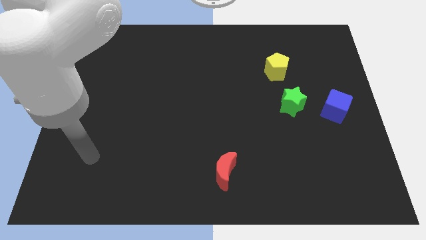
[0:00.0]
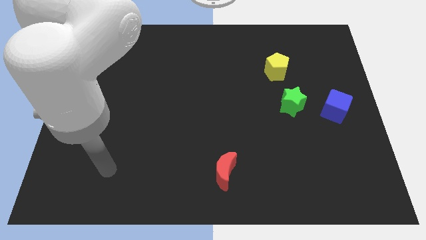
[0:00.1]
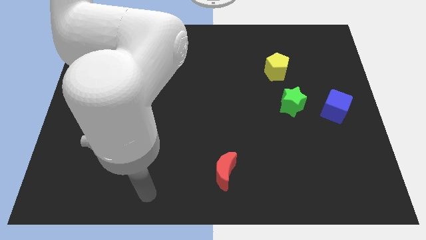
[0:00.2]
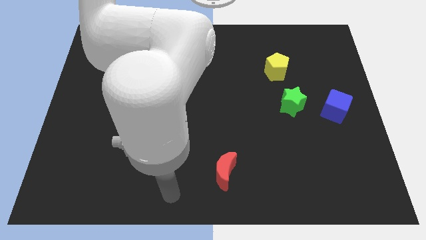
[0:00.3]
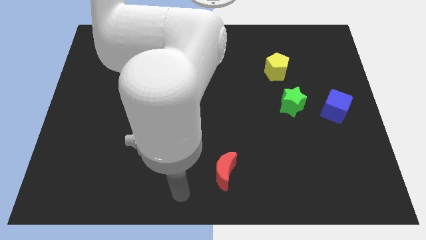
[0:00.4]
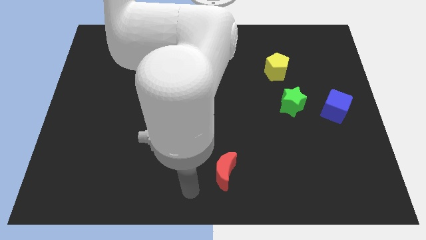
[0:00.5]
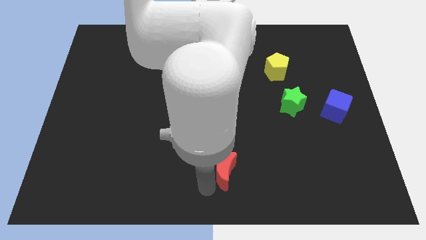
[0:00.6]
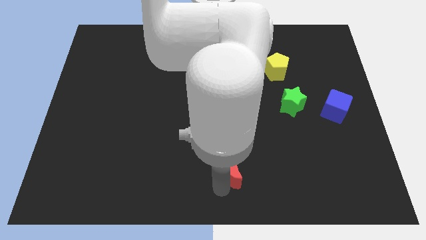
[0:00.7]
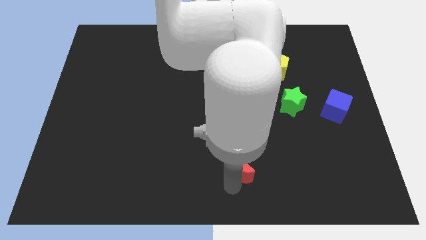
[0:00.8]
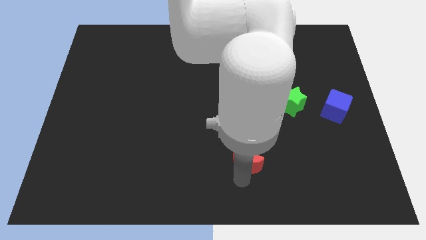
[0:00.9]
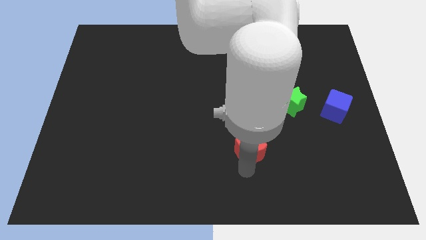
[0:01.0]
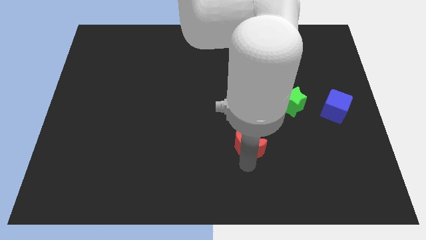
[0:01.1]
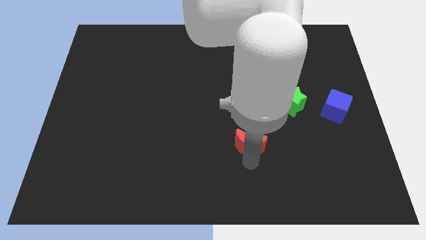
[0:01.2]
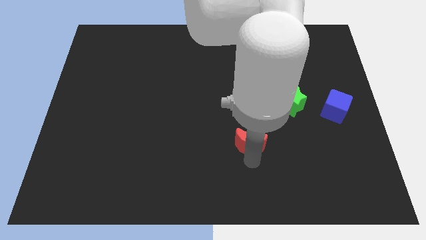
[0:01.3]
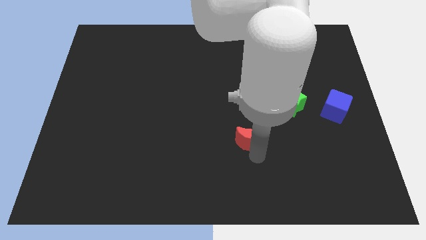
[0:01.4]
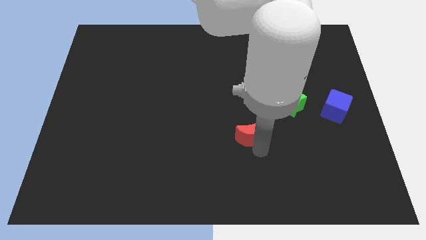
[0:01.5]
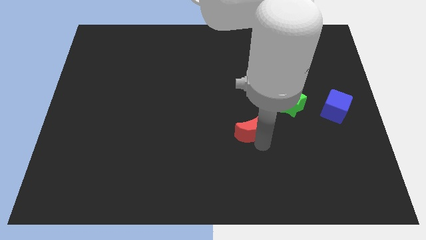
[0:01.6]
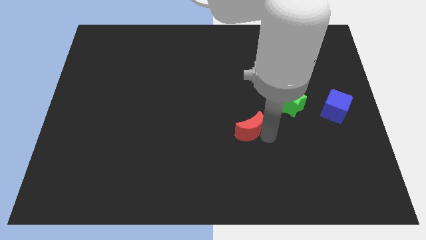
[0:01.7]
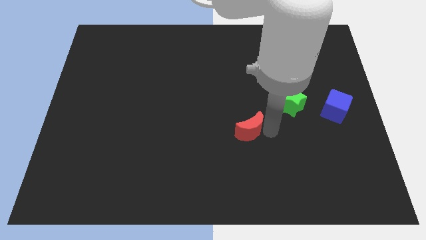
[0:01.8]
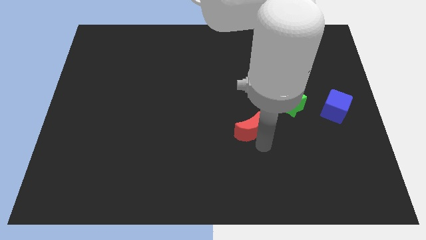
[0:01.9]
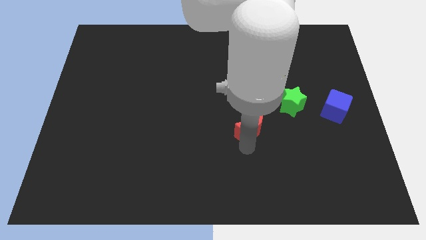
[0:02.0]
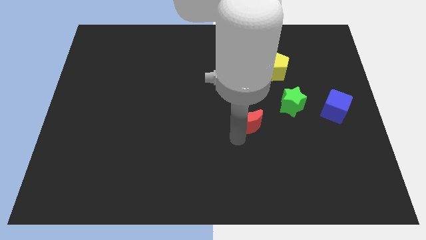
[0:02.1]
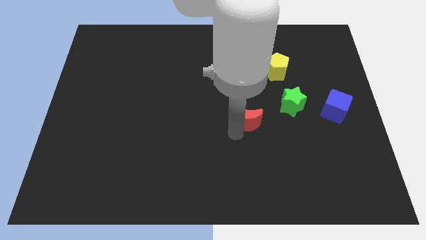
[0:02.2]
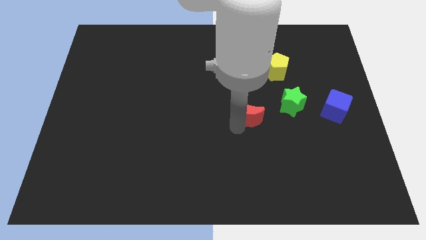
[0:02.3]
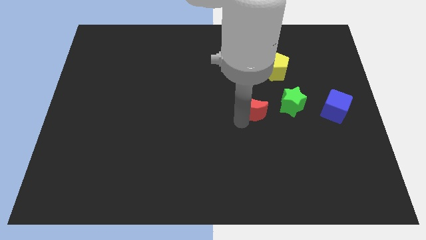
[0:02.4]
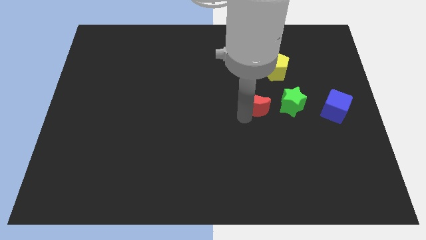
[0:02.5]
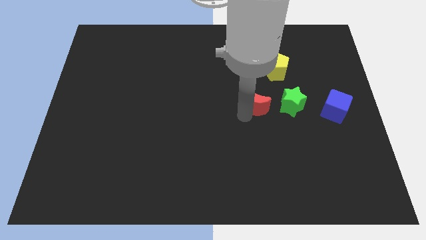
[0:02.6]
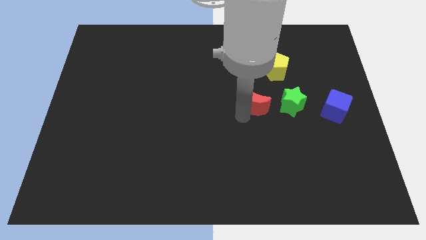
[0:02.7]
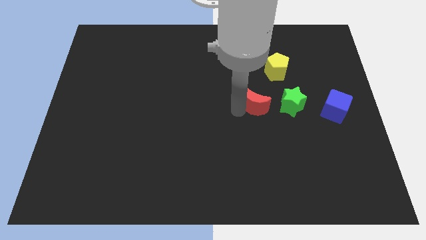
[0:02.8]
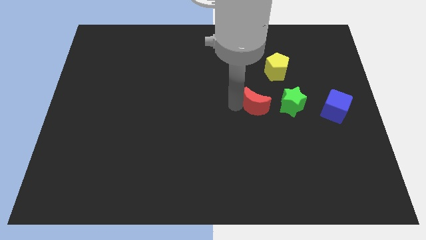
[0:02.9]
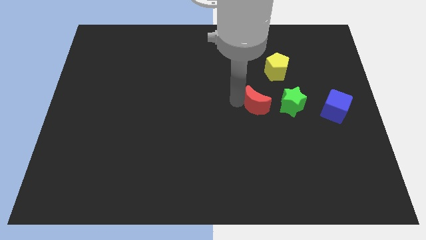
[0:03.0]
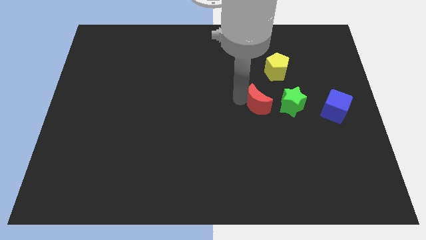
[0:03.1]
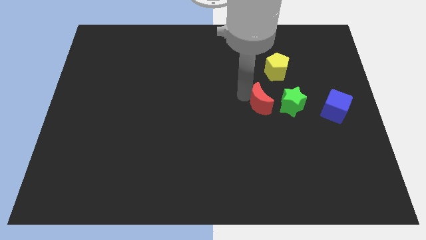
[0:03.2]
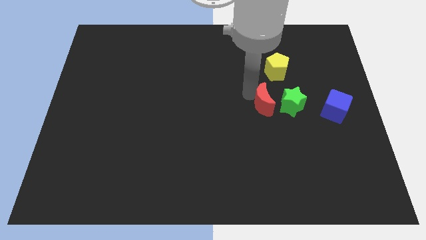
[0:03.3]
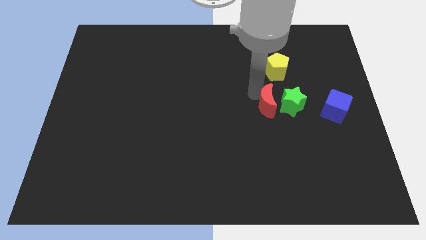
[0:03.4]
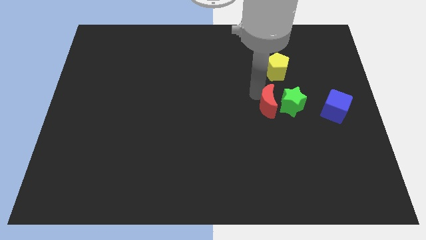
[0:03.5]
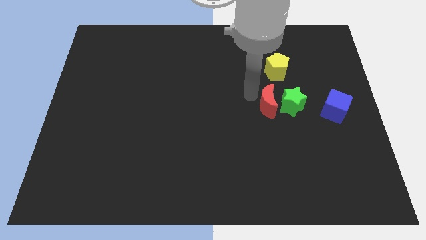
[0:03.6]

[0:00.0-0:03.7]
slide the red moon towards the green block

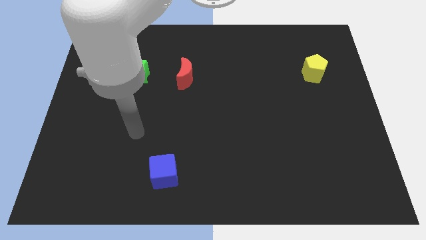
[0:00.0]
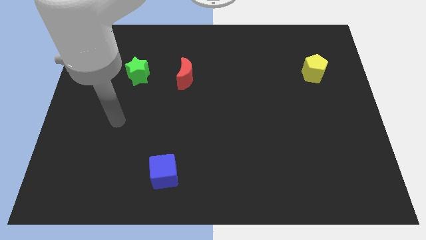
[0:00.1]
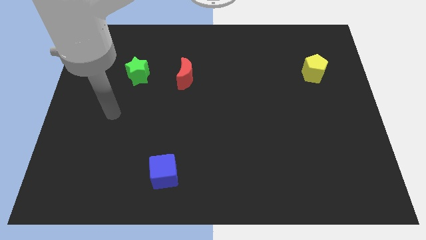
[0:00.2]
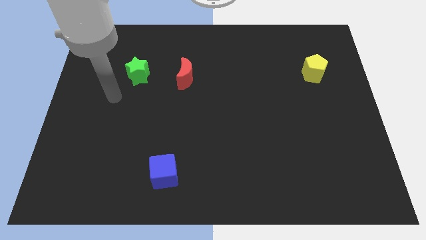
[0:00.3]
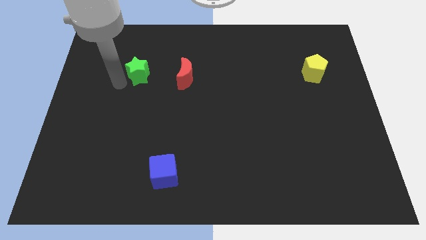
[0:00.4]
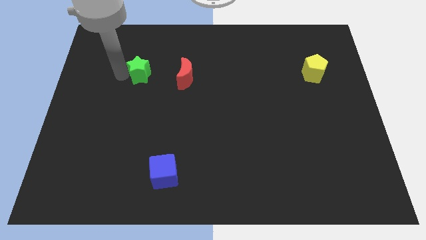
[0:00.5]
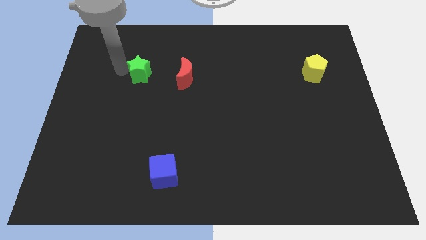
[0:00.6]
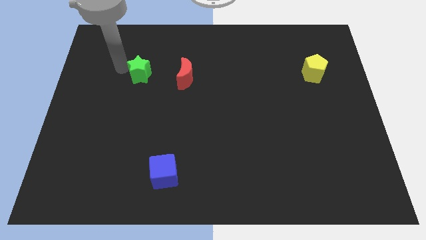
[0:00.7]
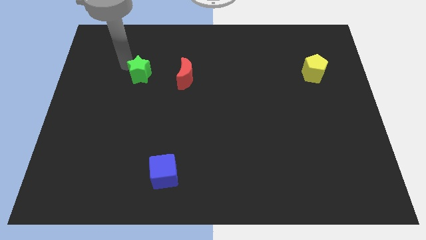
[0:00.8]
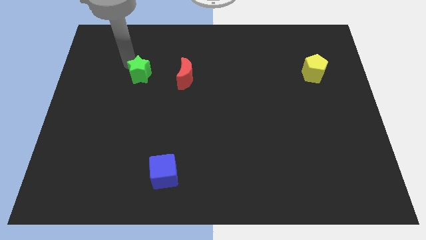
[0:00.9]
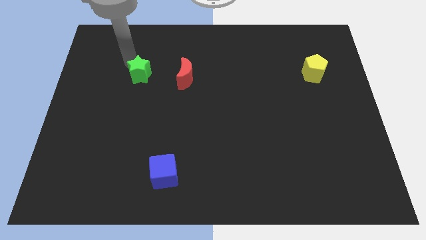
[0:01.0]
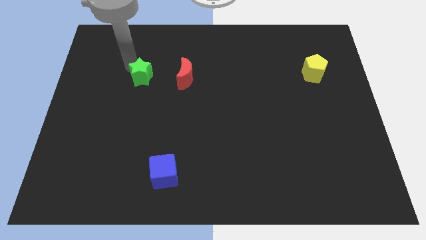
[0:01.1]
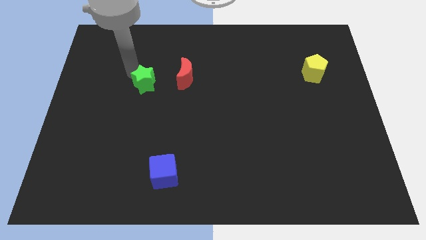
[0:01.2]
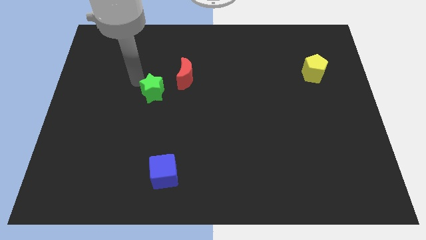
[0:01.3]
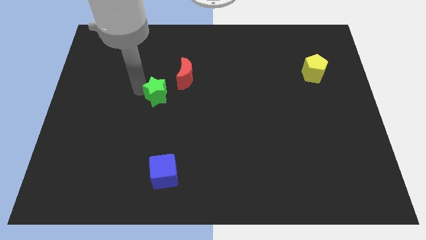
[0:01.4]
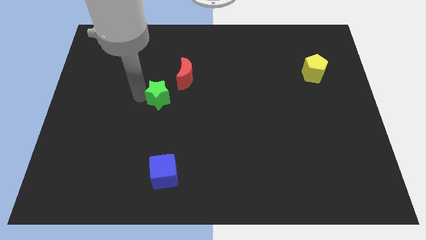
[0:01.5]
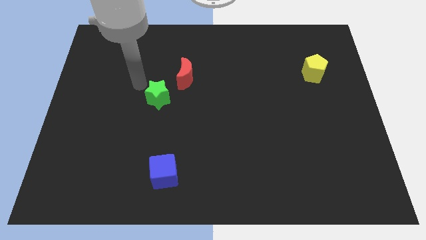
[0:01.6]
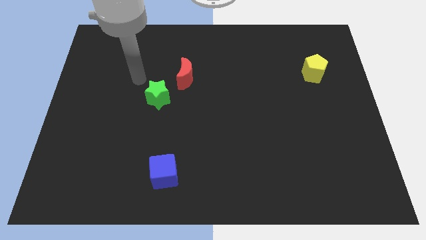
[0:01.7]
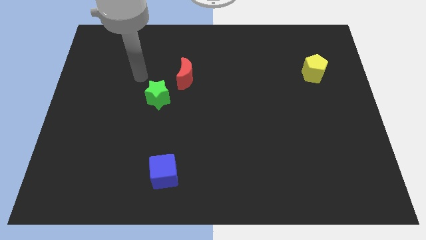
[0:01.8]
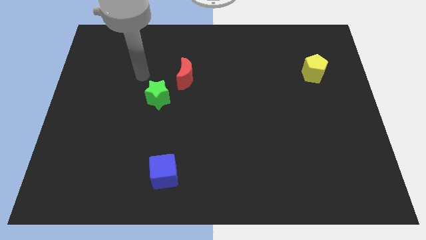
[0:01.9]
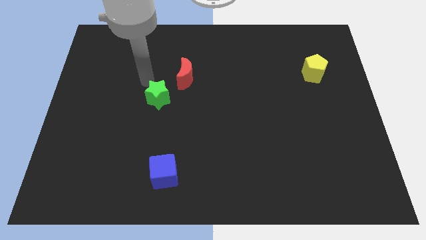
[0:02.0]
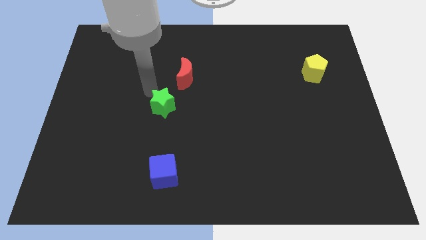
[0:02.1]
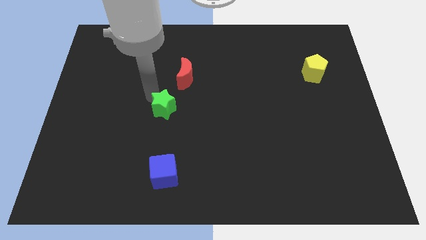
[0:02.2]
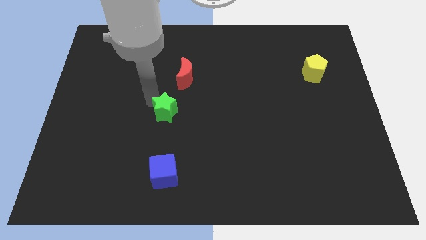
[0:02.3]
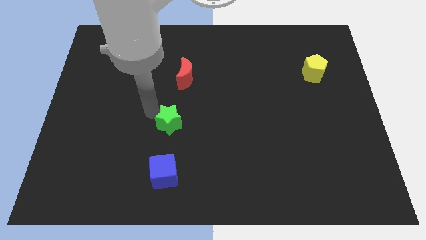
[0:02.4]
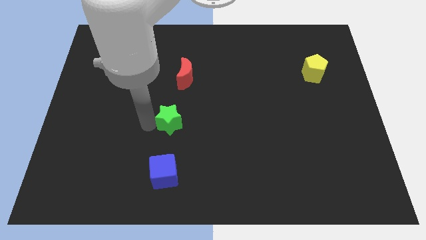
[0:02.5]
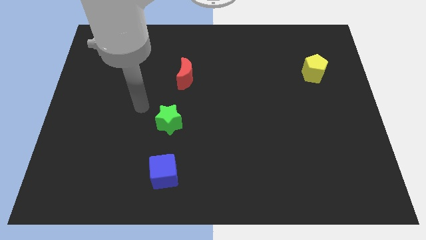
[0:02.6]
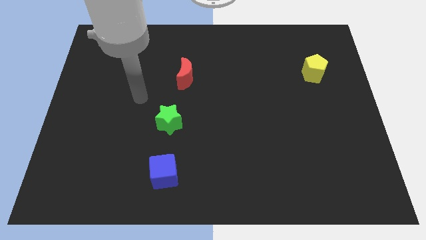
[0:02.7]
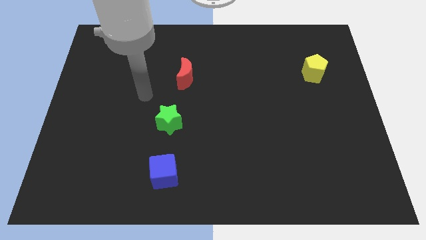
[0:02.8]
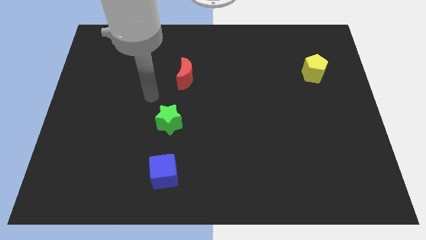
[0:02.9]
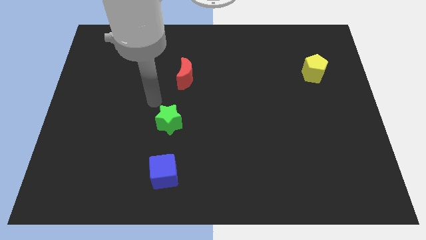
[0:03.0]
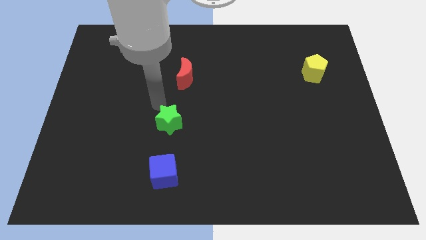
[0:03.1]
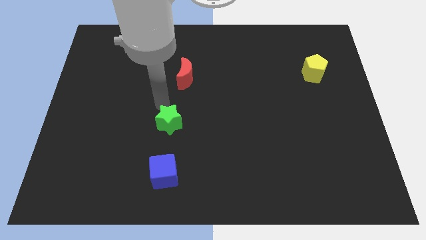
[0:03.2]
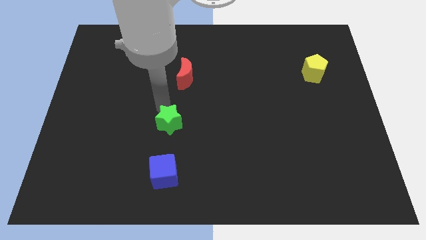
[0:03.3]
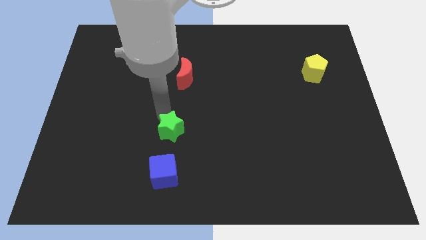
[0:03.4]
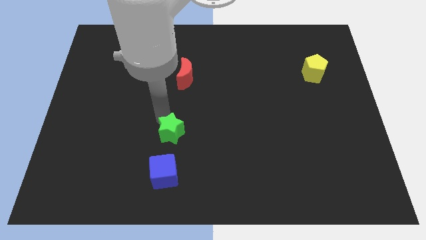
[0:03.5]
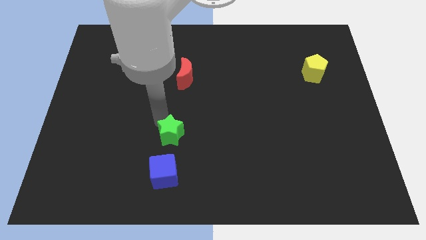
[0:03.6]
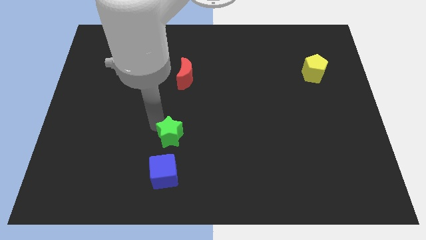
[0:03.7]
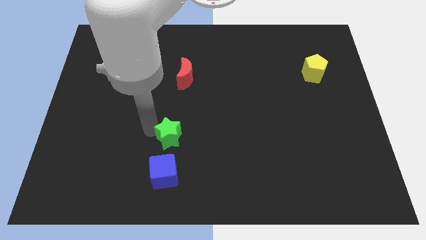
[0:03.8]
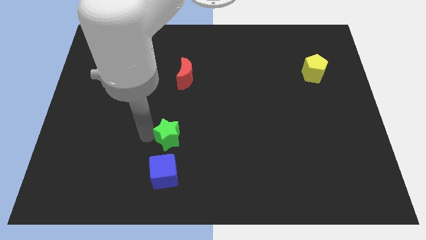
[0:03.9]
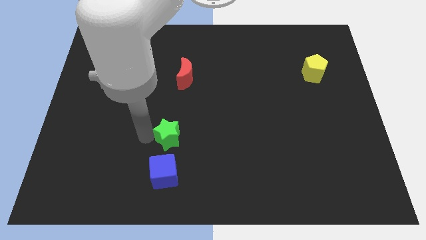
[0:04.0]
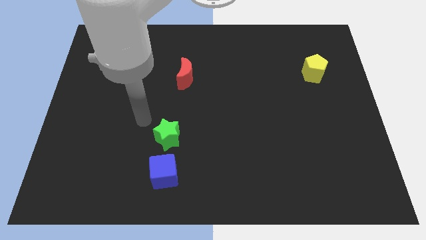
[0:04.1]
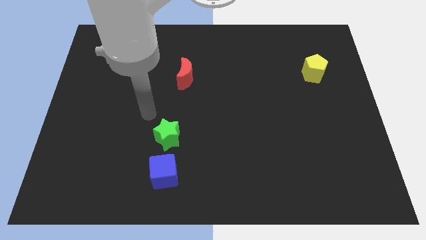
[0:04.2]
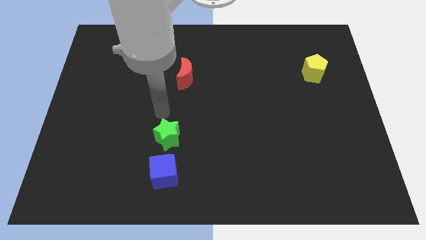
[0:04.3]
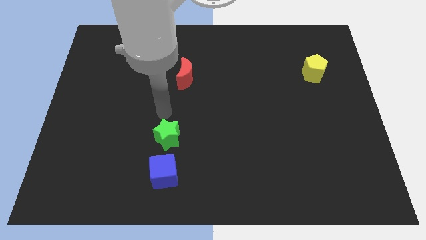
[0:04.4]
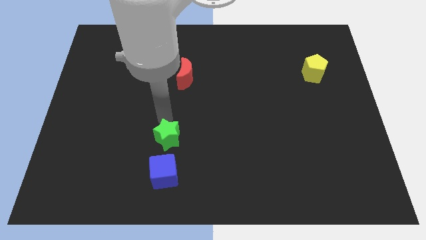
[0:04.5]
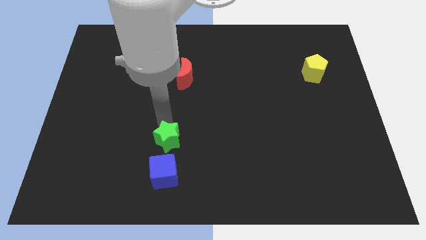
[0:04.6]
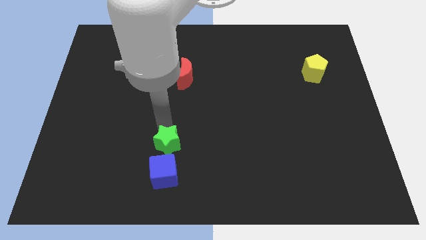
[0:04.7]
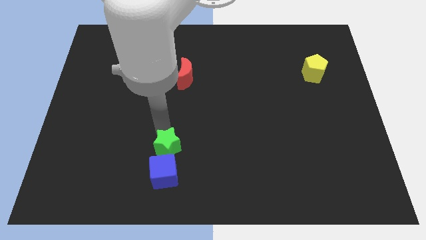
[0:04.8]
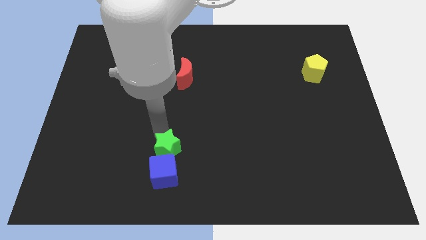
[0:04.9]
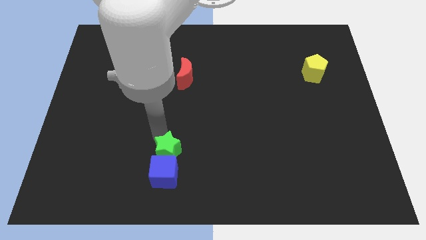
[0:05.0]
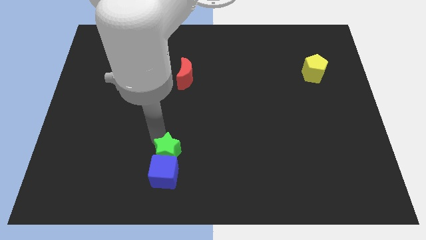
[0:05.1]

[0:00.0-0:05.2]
put the green block next to the blue cube
